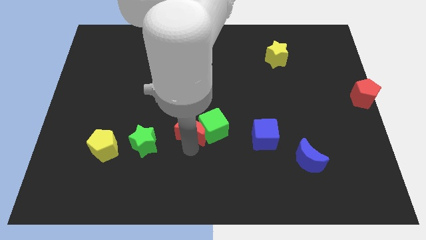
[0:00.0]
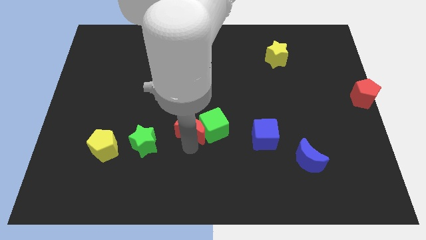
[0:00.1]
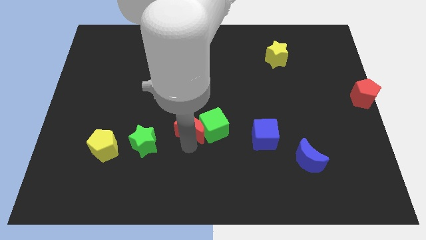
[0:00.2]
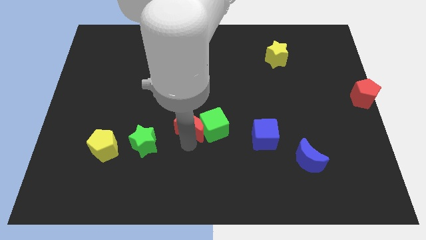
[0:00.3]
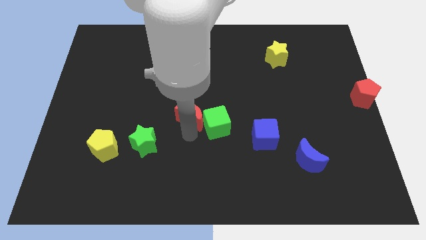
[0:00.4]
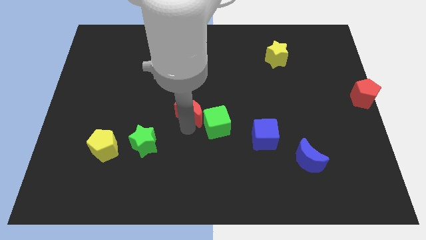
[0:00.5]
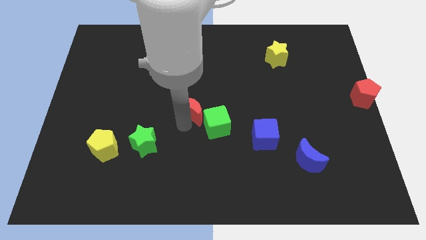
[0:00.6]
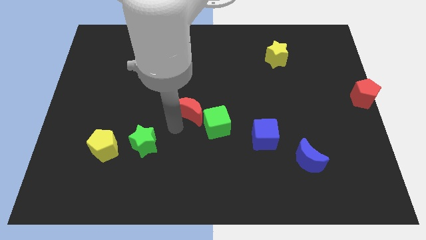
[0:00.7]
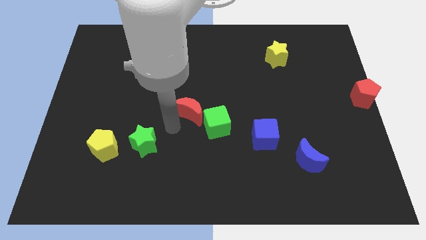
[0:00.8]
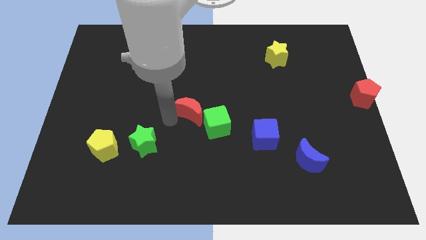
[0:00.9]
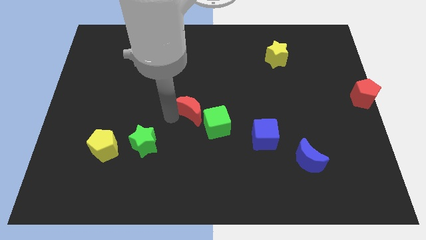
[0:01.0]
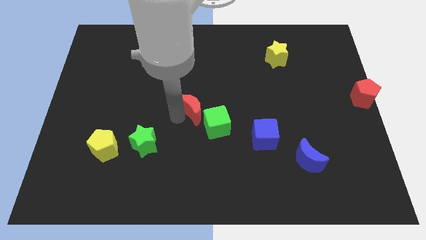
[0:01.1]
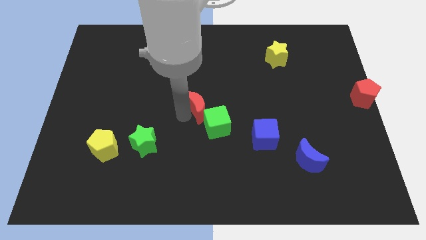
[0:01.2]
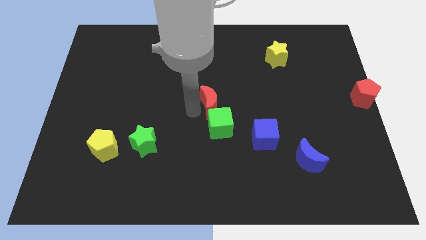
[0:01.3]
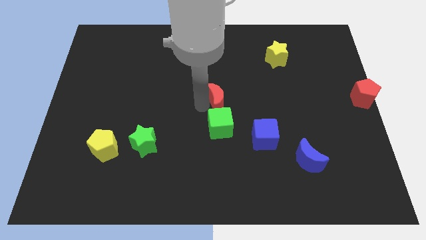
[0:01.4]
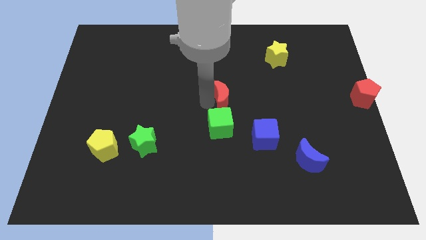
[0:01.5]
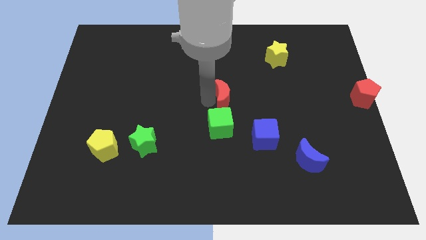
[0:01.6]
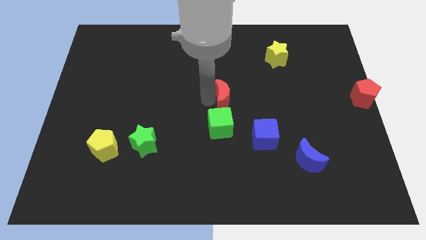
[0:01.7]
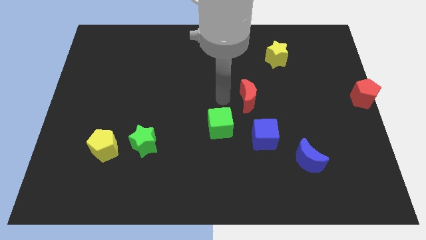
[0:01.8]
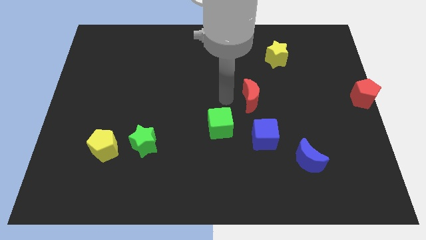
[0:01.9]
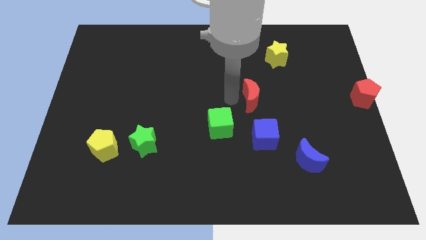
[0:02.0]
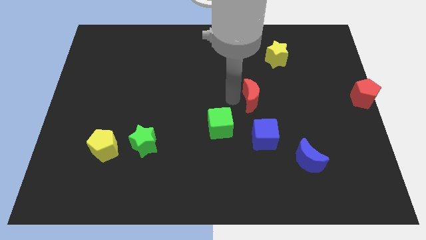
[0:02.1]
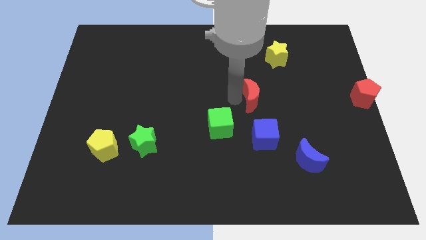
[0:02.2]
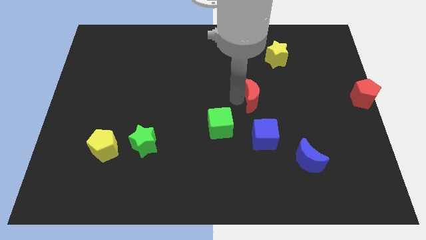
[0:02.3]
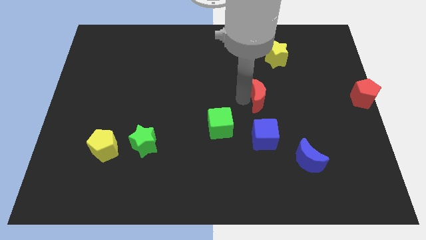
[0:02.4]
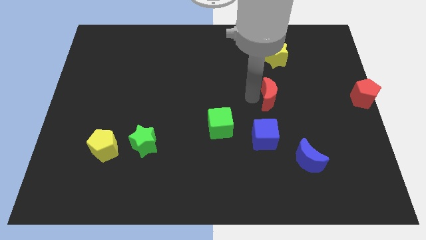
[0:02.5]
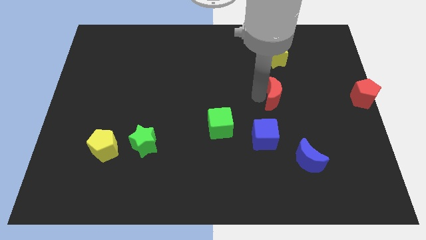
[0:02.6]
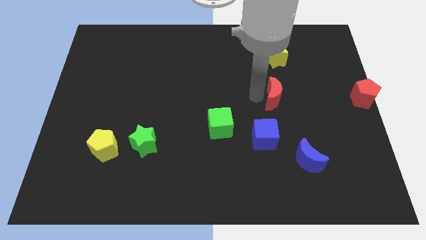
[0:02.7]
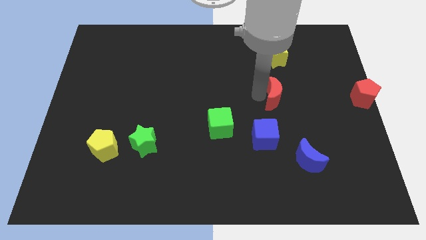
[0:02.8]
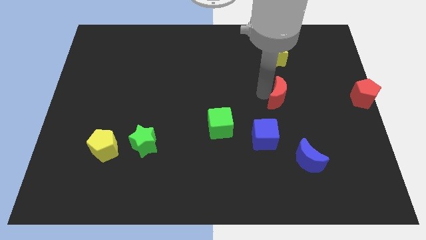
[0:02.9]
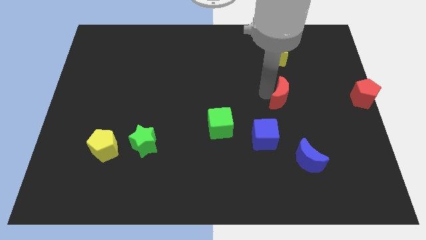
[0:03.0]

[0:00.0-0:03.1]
separate red crescent from green cube

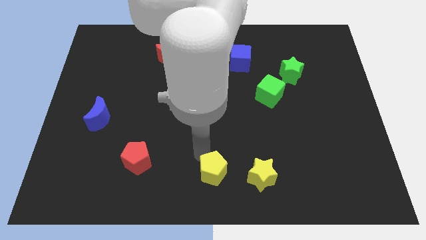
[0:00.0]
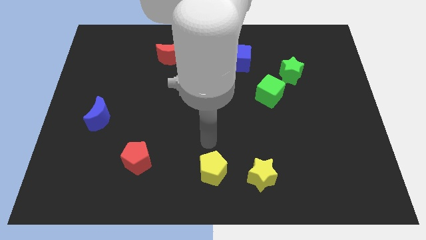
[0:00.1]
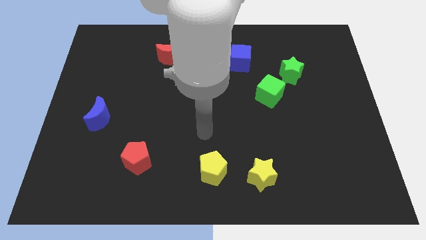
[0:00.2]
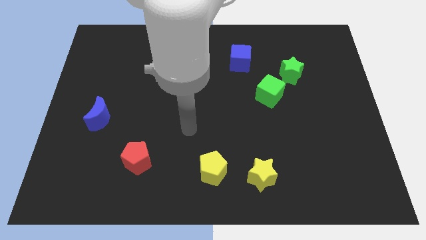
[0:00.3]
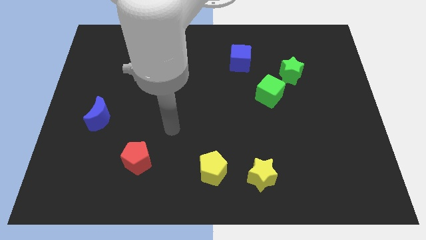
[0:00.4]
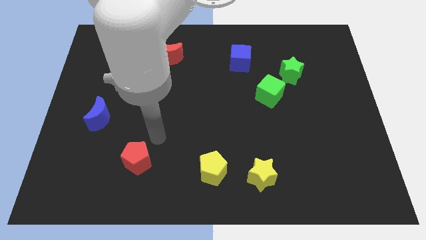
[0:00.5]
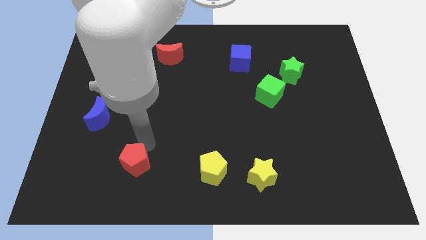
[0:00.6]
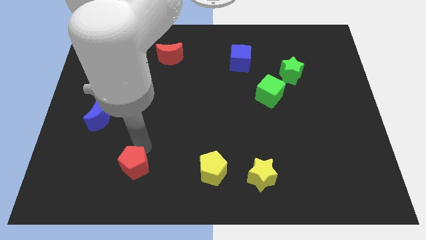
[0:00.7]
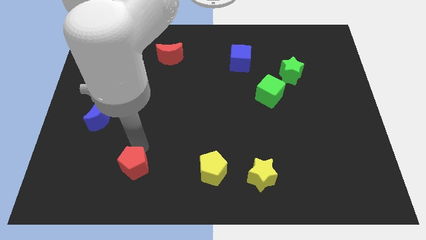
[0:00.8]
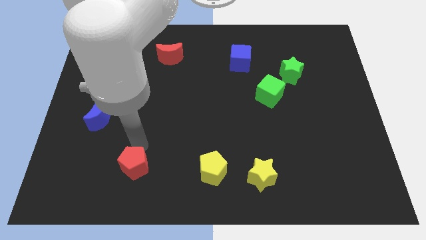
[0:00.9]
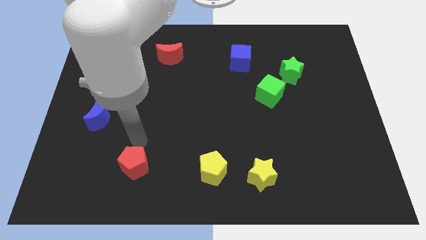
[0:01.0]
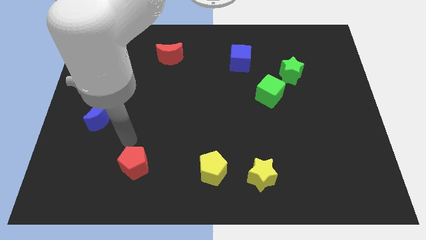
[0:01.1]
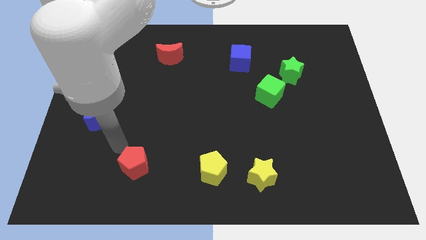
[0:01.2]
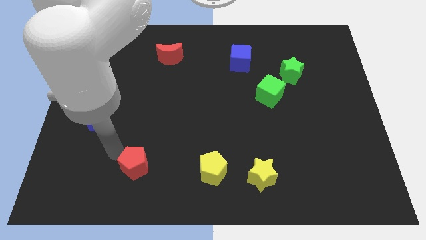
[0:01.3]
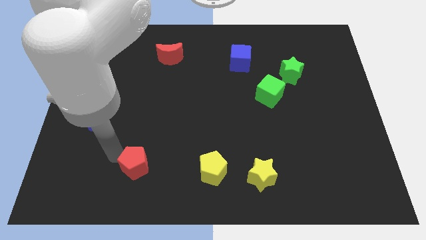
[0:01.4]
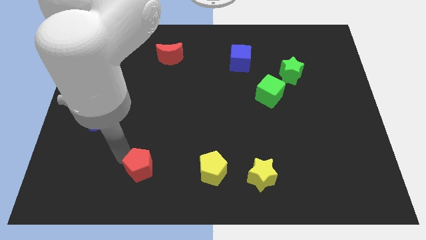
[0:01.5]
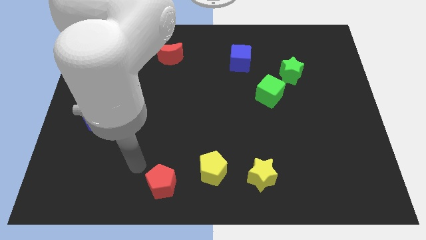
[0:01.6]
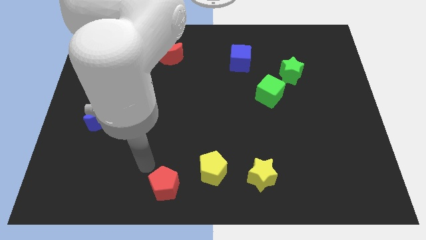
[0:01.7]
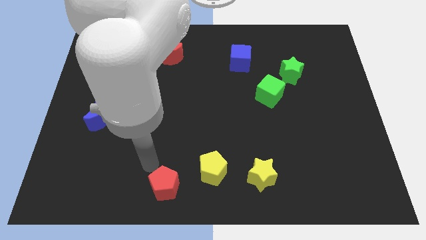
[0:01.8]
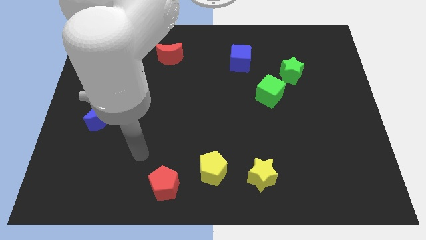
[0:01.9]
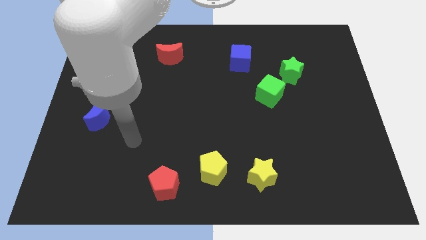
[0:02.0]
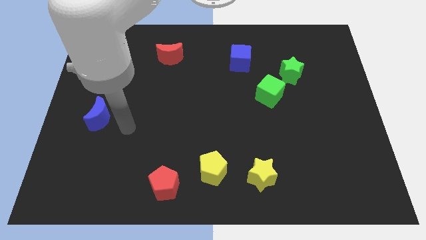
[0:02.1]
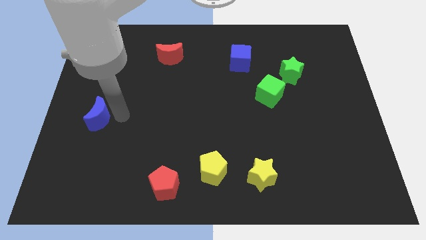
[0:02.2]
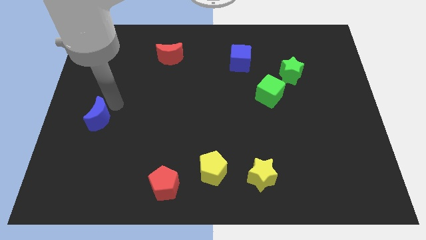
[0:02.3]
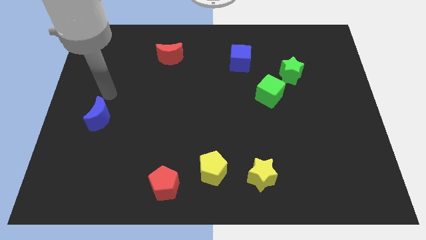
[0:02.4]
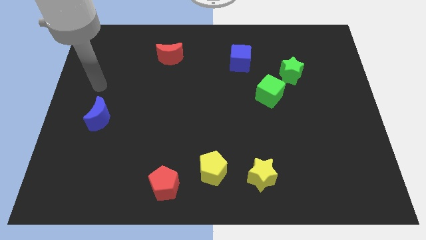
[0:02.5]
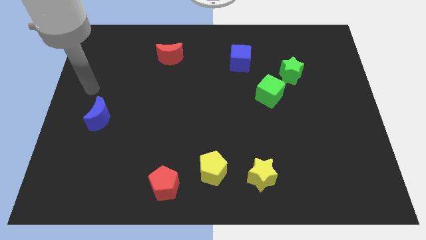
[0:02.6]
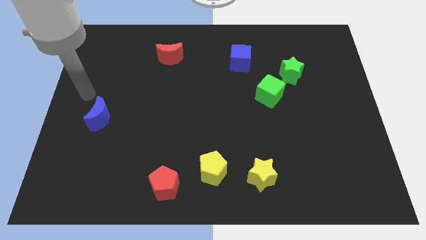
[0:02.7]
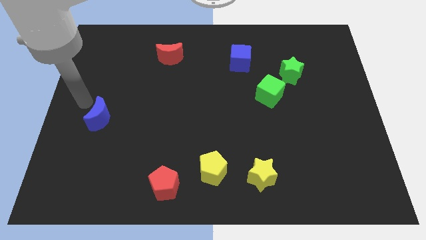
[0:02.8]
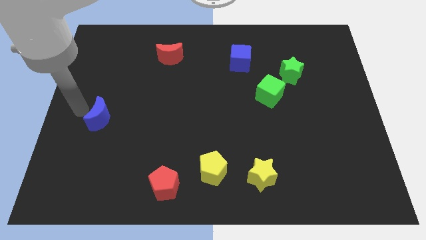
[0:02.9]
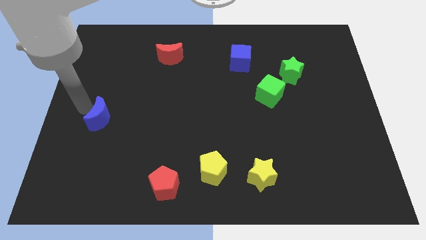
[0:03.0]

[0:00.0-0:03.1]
drag the red pentagon beside the yellow pentagon

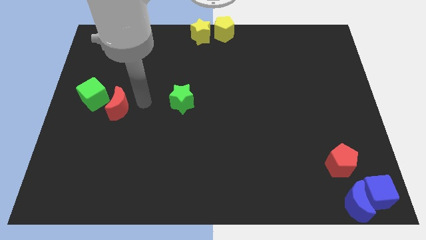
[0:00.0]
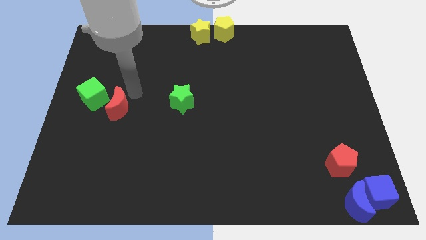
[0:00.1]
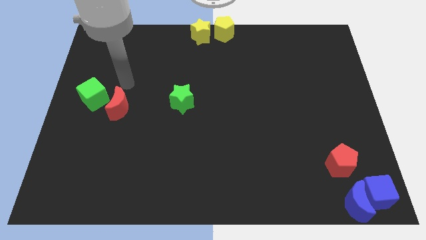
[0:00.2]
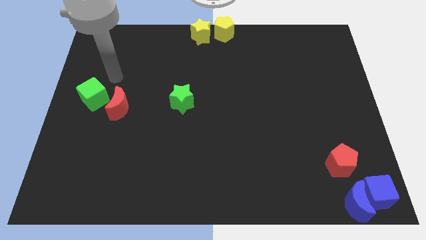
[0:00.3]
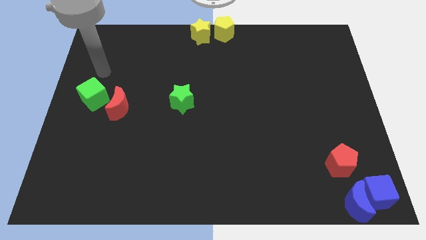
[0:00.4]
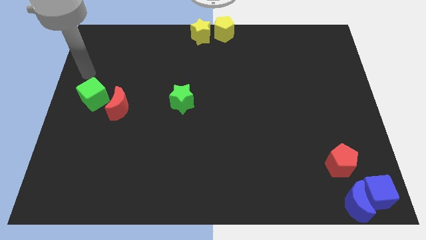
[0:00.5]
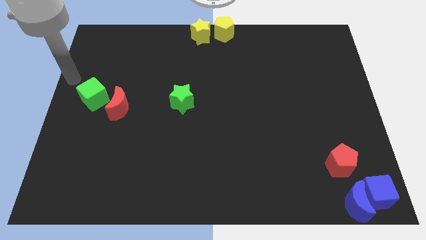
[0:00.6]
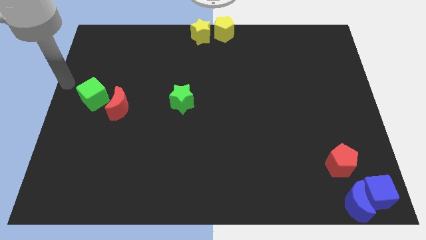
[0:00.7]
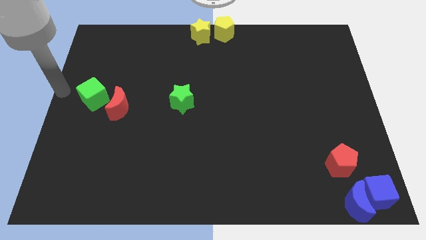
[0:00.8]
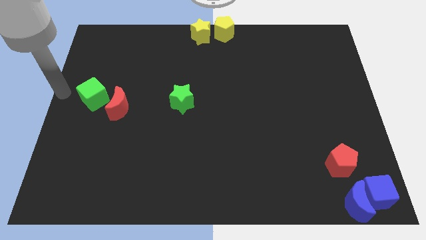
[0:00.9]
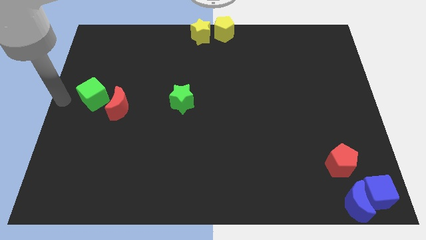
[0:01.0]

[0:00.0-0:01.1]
point your arm at the center left side of the board

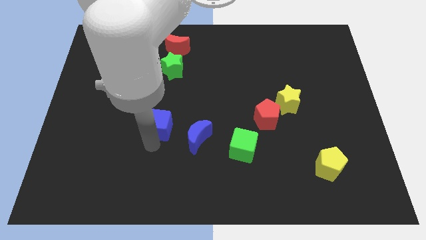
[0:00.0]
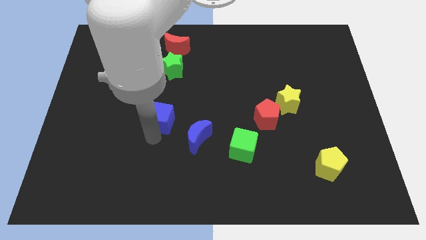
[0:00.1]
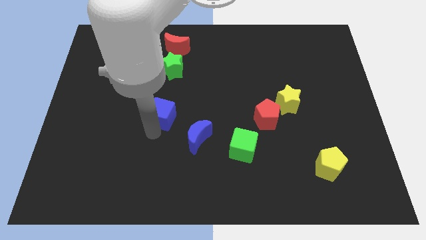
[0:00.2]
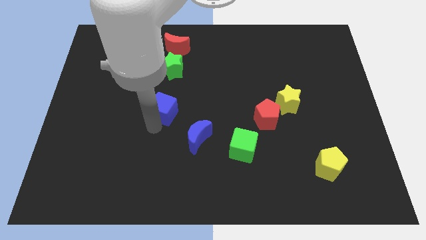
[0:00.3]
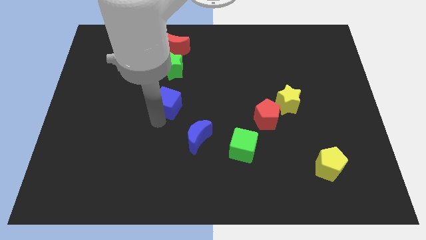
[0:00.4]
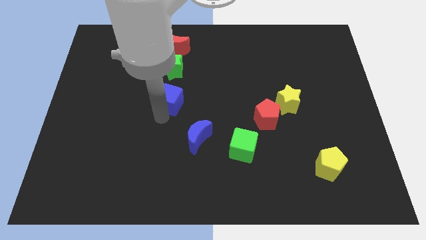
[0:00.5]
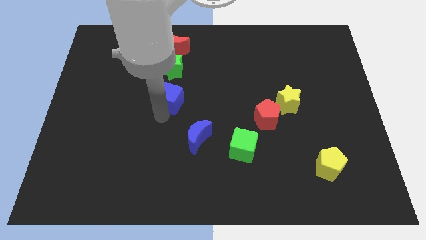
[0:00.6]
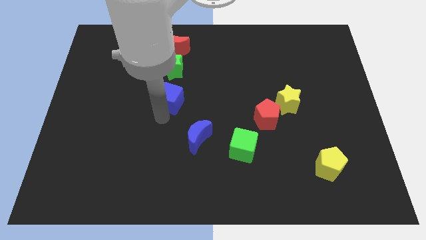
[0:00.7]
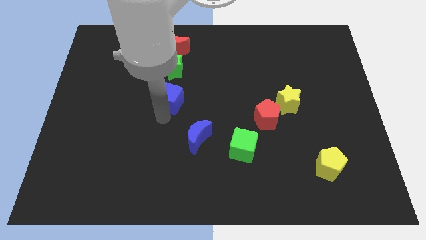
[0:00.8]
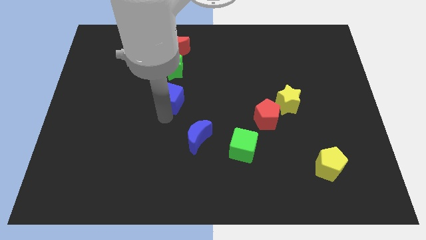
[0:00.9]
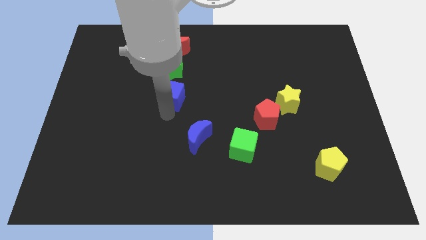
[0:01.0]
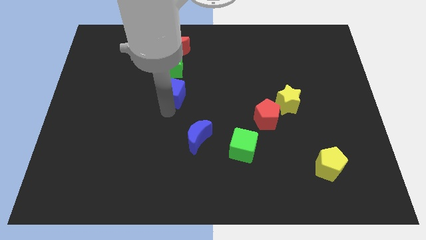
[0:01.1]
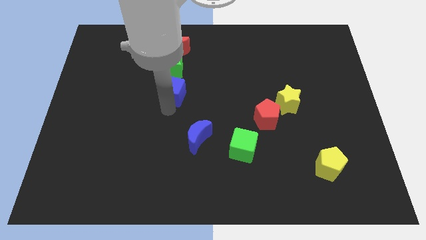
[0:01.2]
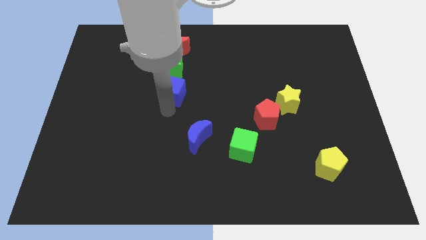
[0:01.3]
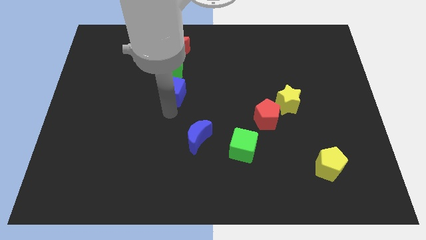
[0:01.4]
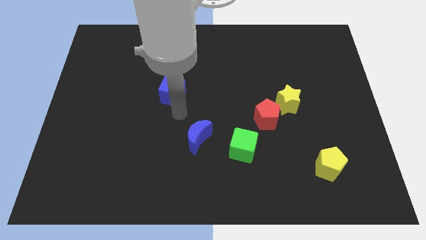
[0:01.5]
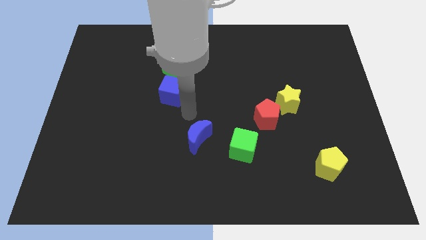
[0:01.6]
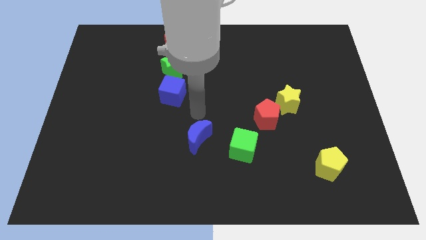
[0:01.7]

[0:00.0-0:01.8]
place the blue cube on the bottom of green star

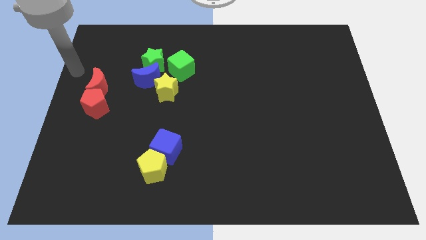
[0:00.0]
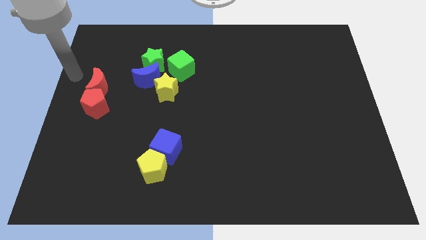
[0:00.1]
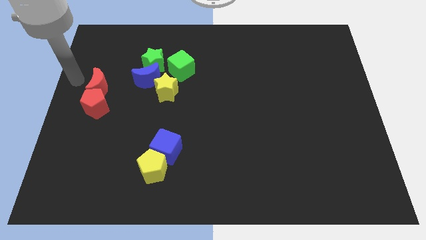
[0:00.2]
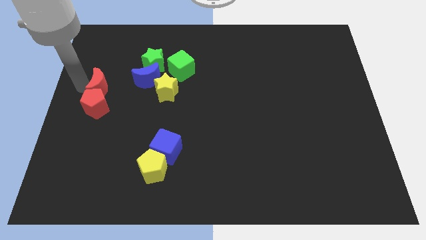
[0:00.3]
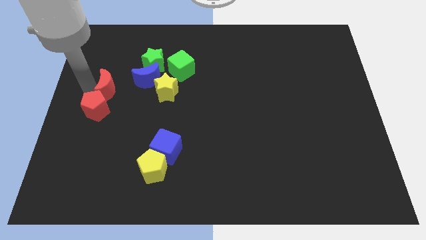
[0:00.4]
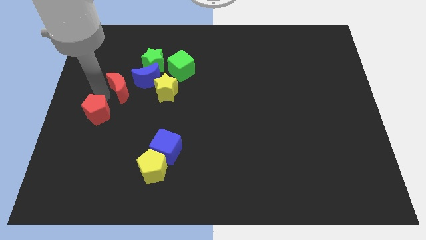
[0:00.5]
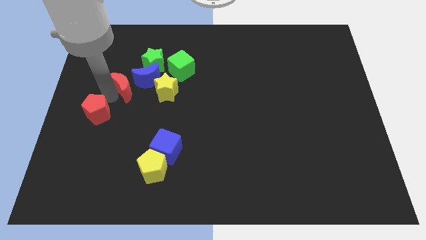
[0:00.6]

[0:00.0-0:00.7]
separate the red moon from the red pentagon
